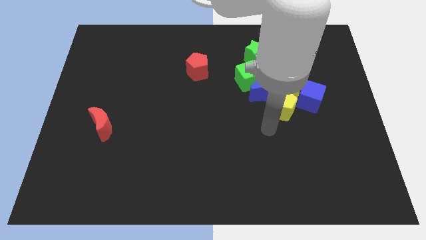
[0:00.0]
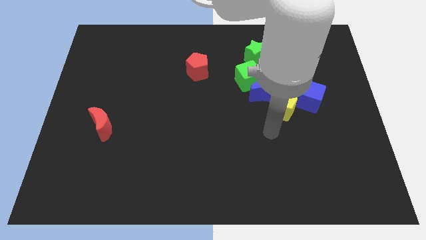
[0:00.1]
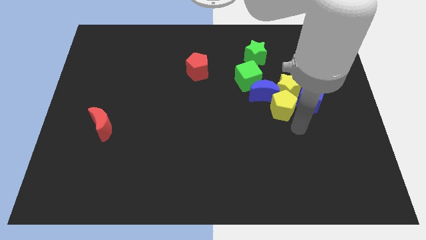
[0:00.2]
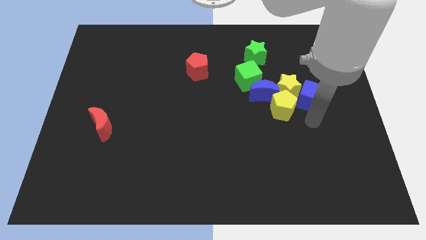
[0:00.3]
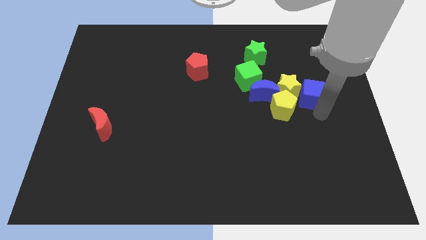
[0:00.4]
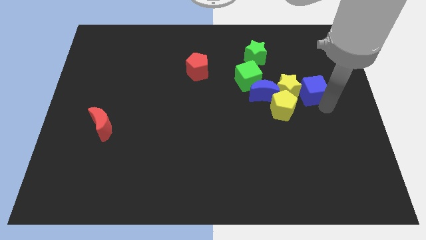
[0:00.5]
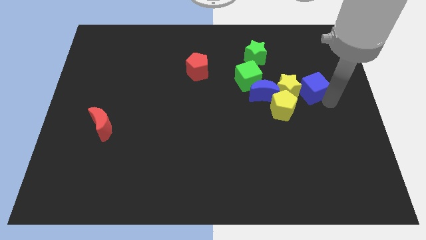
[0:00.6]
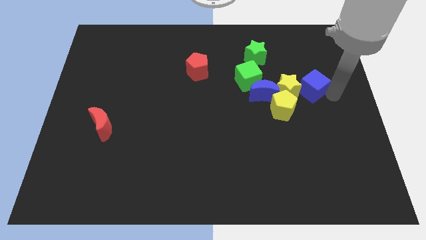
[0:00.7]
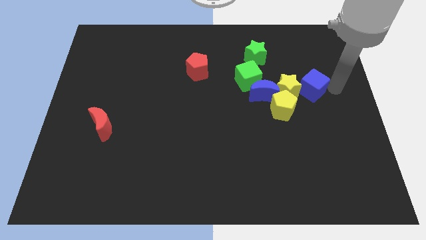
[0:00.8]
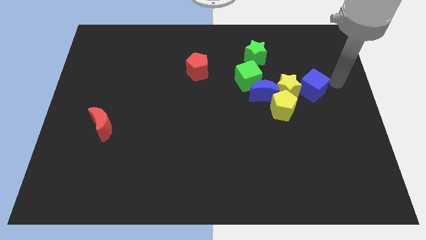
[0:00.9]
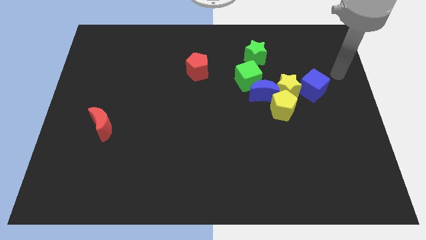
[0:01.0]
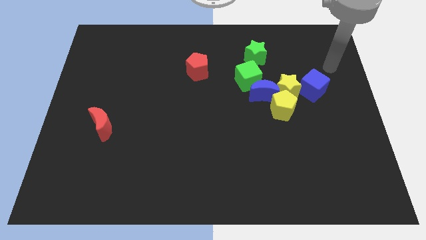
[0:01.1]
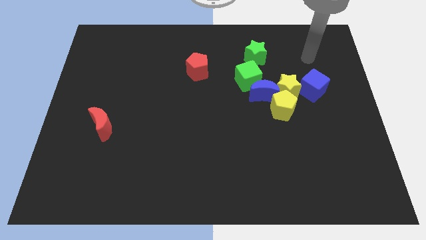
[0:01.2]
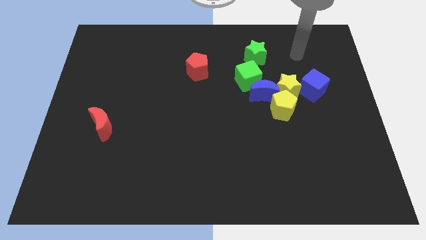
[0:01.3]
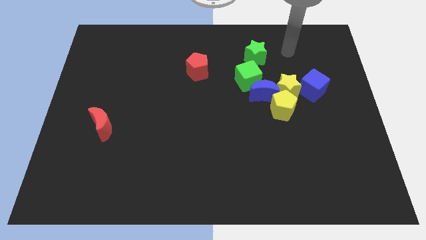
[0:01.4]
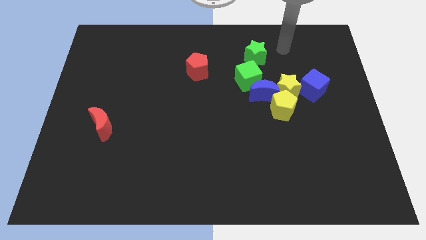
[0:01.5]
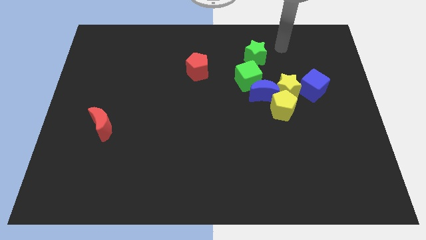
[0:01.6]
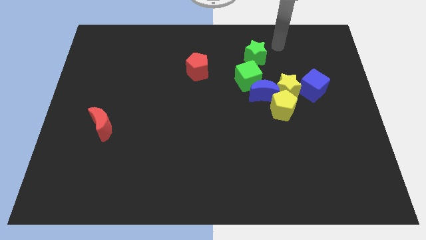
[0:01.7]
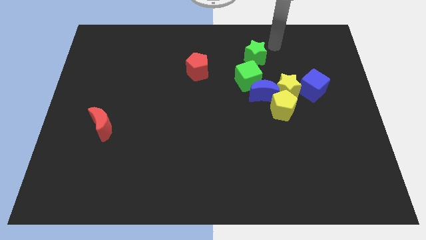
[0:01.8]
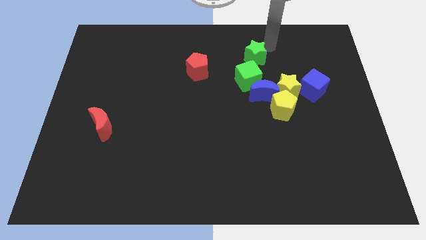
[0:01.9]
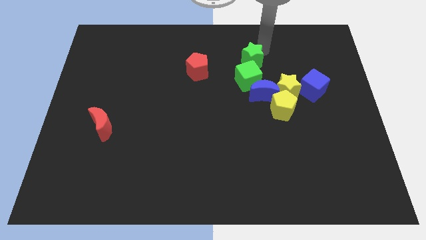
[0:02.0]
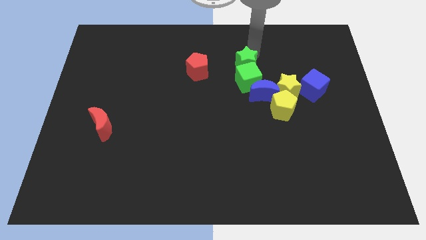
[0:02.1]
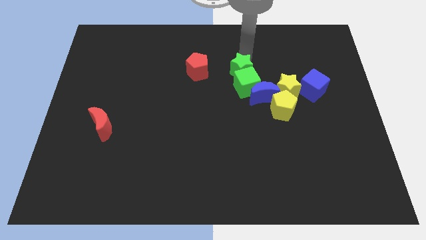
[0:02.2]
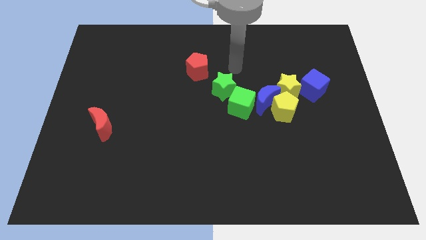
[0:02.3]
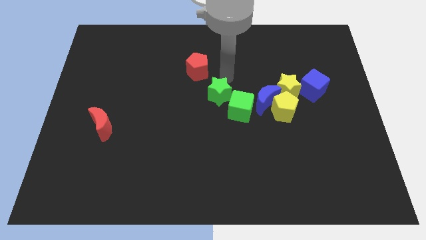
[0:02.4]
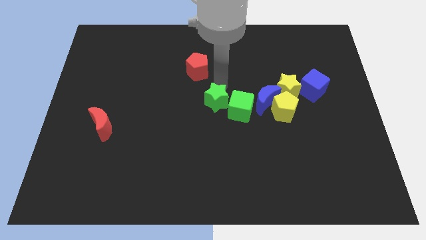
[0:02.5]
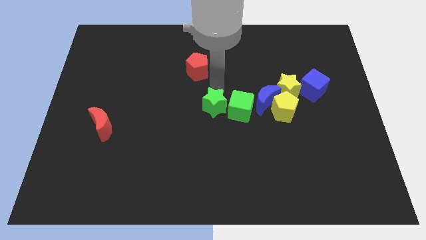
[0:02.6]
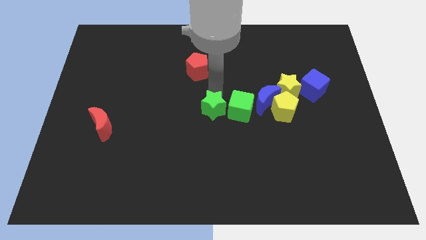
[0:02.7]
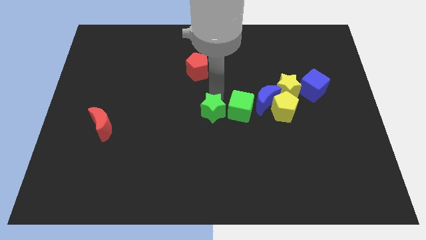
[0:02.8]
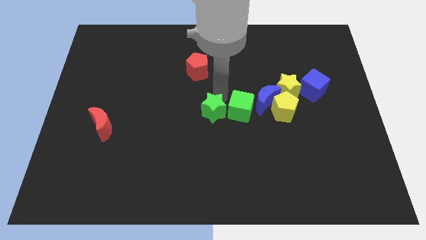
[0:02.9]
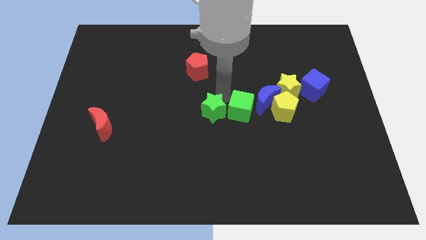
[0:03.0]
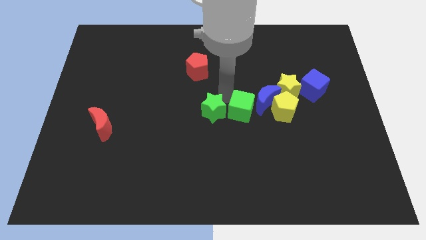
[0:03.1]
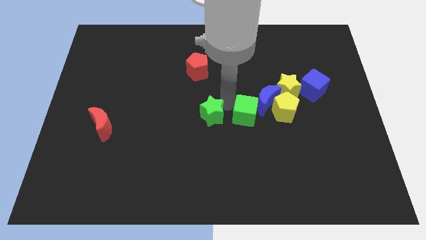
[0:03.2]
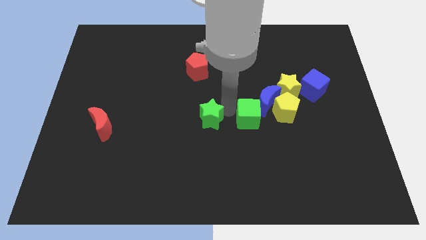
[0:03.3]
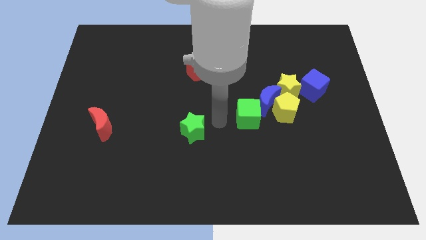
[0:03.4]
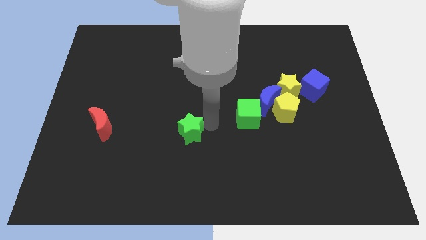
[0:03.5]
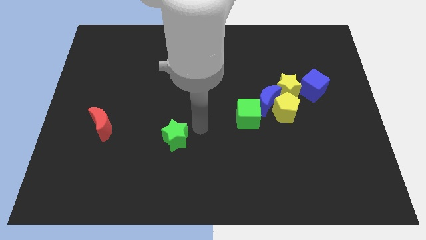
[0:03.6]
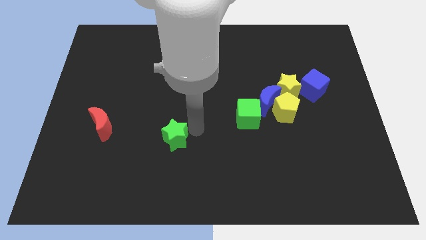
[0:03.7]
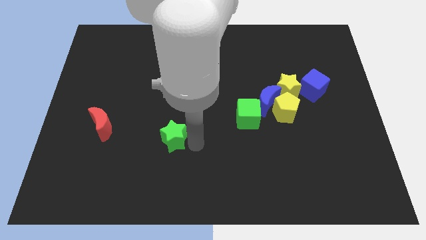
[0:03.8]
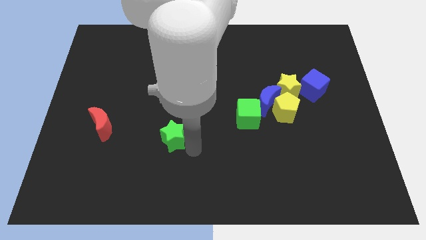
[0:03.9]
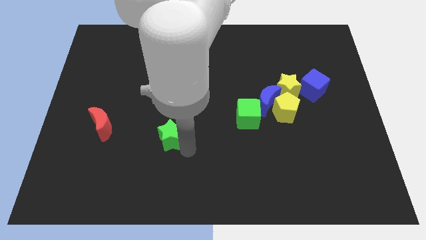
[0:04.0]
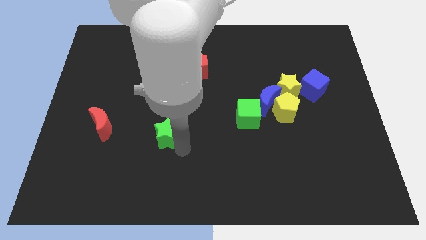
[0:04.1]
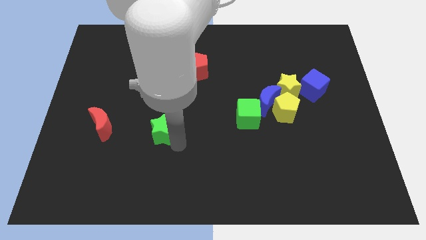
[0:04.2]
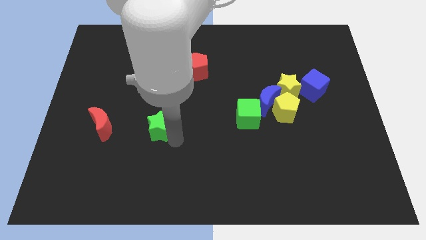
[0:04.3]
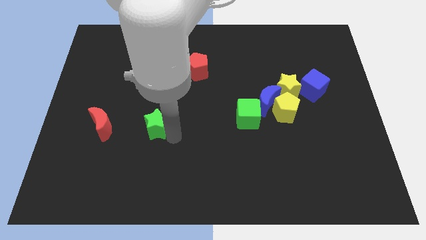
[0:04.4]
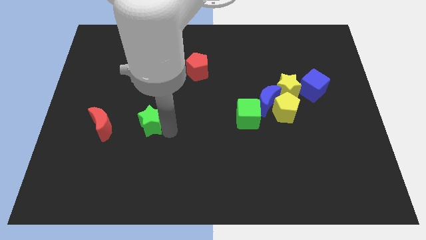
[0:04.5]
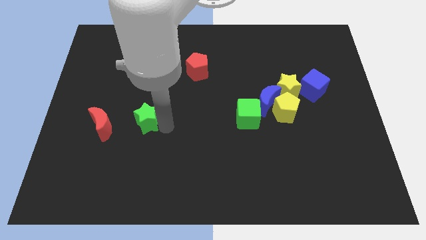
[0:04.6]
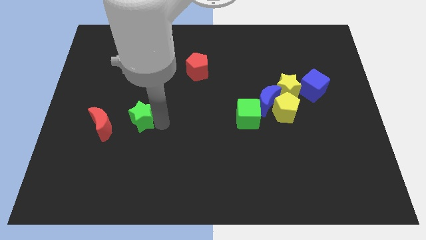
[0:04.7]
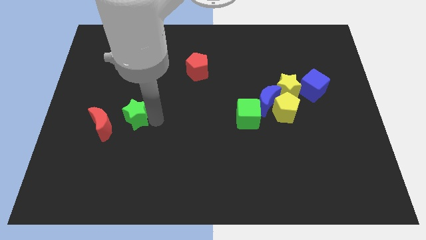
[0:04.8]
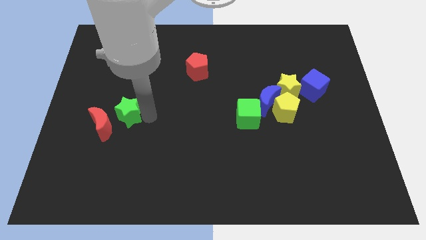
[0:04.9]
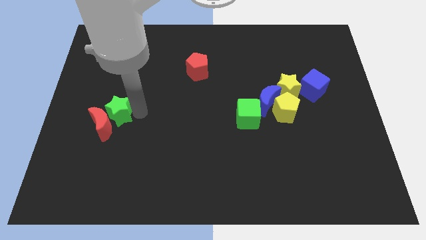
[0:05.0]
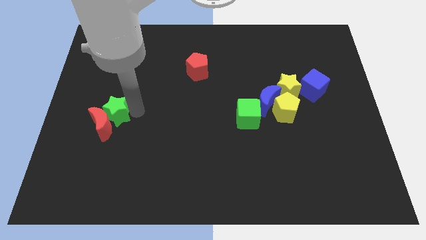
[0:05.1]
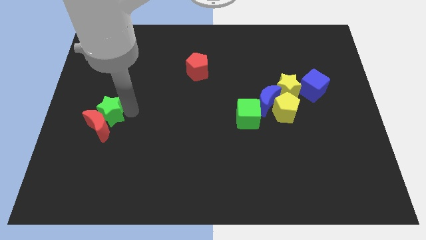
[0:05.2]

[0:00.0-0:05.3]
move the green star to the red moon

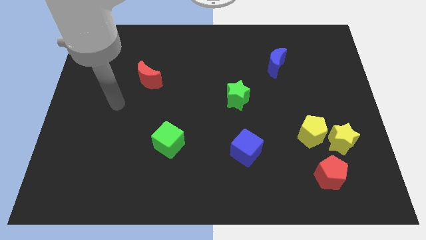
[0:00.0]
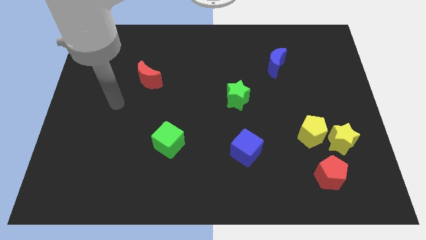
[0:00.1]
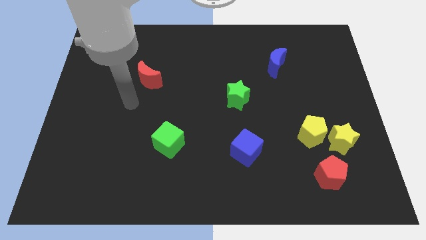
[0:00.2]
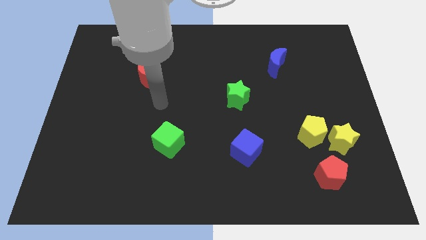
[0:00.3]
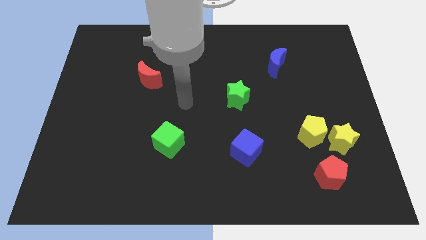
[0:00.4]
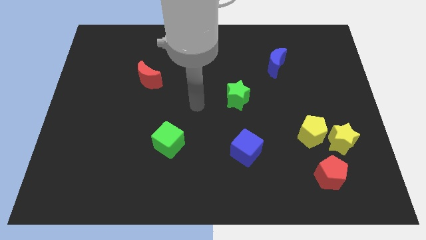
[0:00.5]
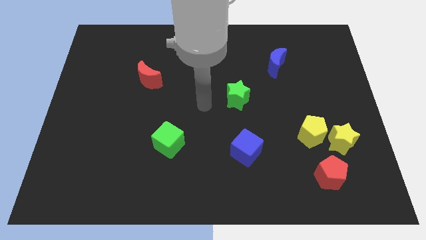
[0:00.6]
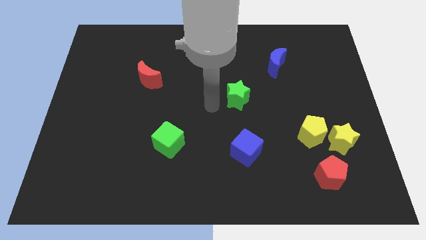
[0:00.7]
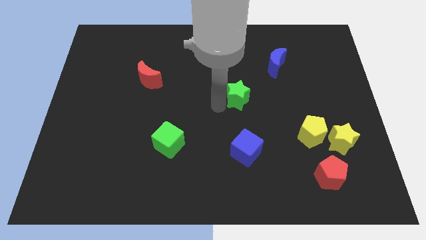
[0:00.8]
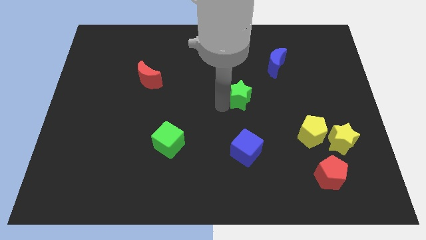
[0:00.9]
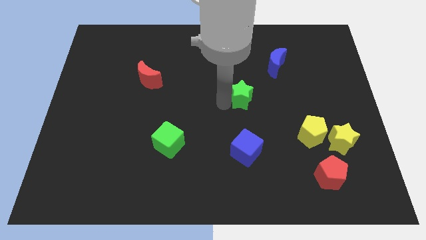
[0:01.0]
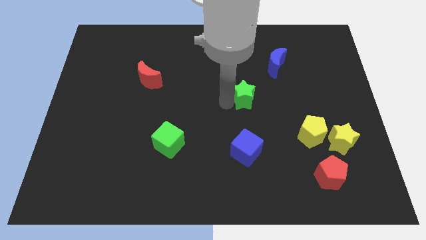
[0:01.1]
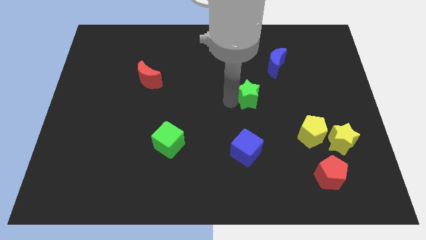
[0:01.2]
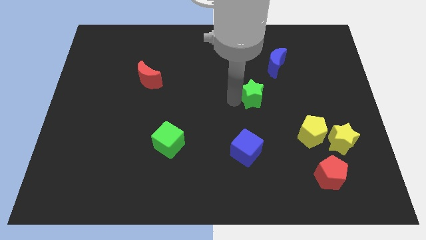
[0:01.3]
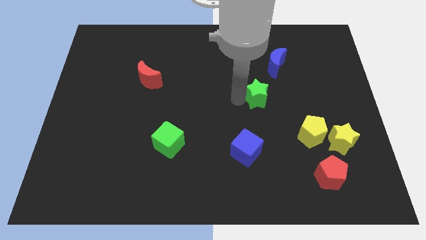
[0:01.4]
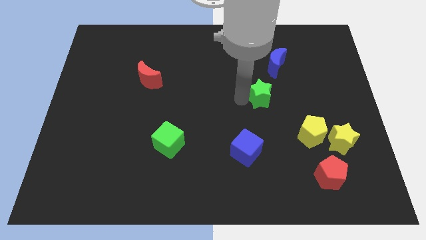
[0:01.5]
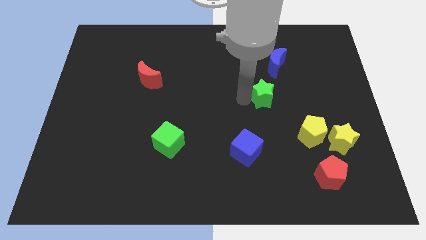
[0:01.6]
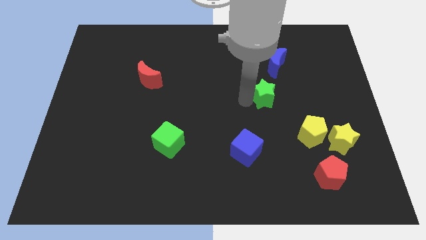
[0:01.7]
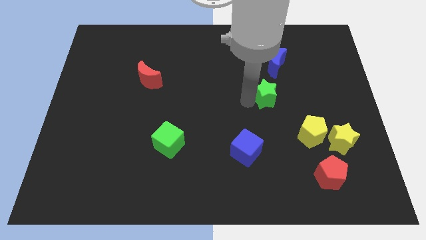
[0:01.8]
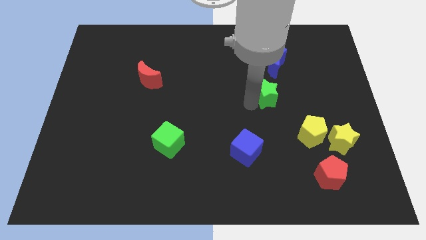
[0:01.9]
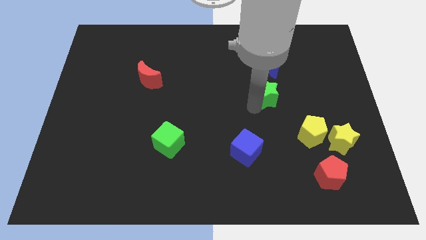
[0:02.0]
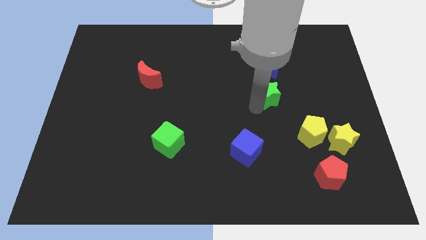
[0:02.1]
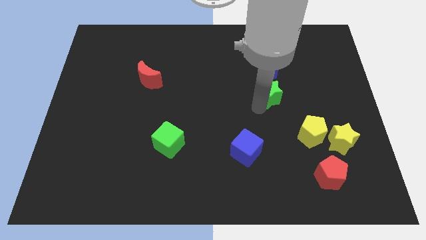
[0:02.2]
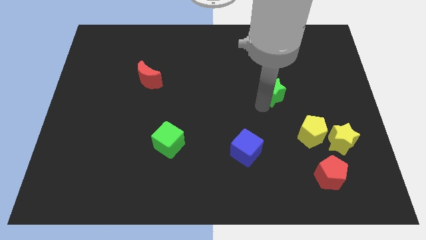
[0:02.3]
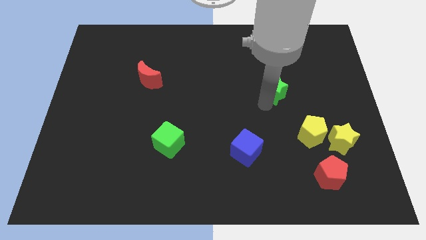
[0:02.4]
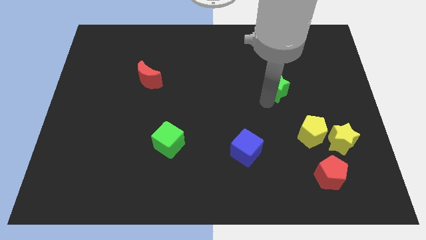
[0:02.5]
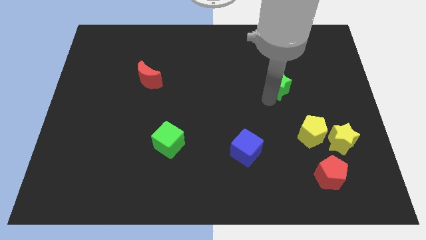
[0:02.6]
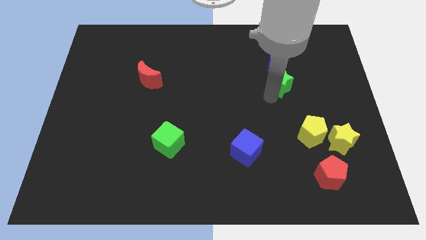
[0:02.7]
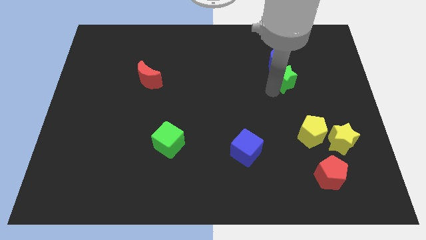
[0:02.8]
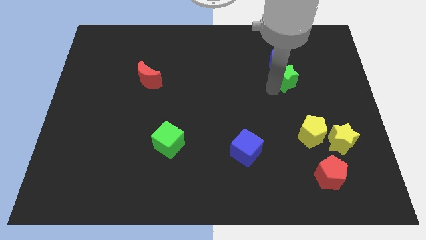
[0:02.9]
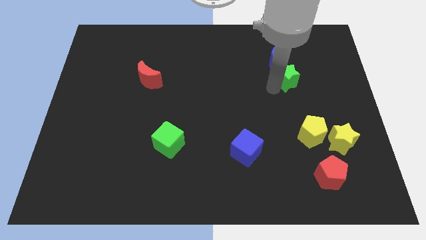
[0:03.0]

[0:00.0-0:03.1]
push the green star next to the blue moon
